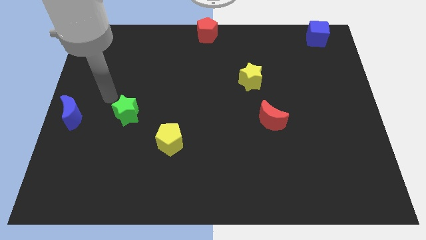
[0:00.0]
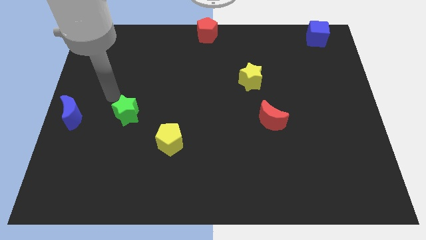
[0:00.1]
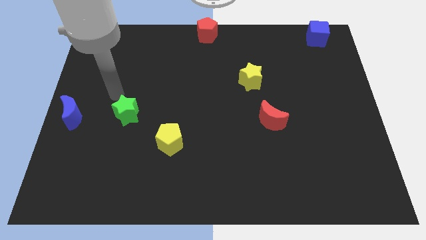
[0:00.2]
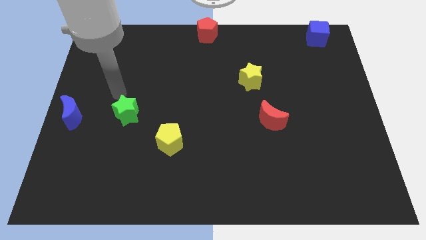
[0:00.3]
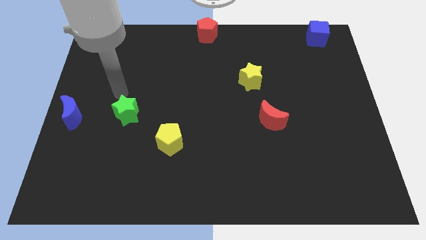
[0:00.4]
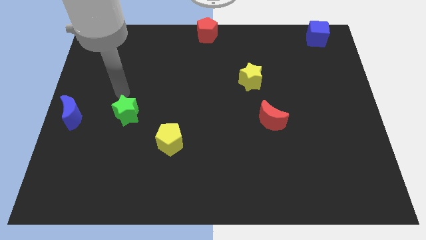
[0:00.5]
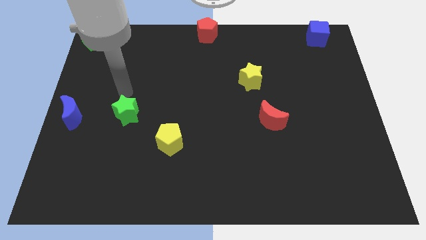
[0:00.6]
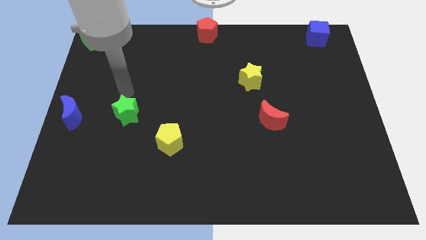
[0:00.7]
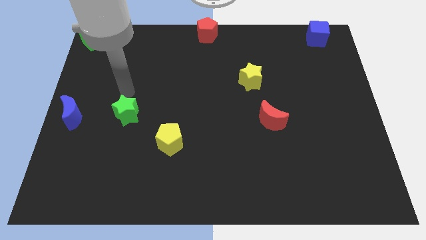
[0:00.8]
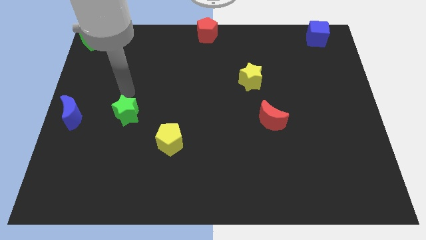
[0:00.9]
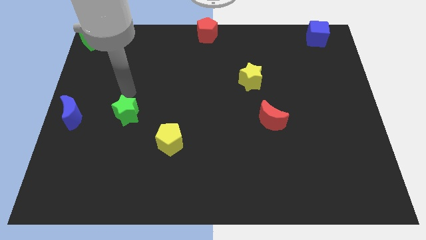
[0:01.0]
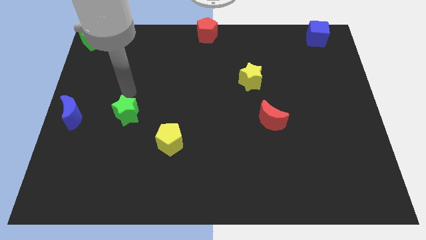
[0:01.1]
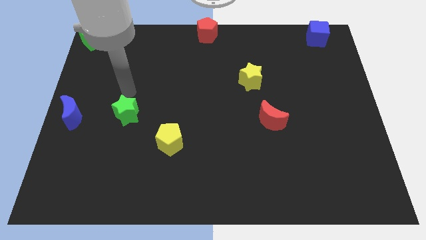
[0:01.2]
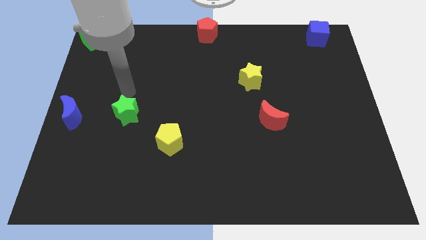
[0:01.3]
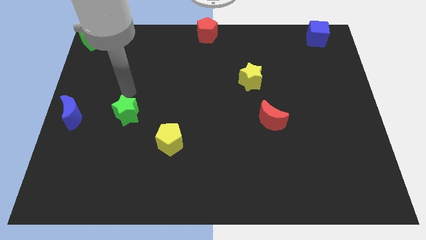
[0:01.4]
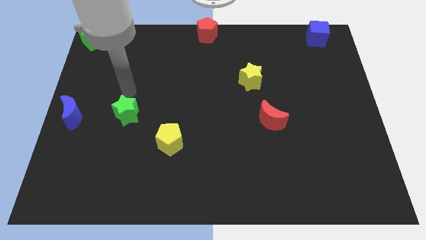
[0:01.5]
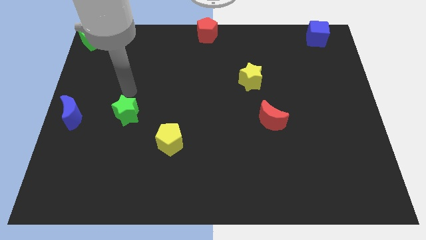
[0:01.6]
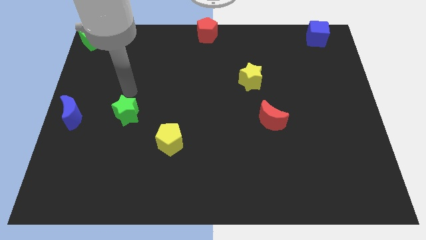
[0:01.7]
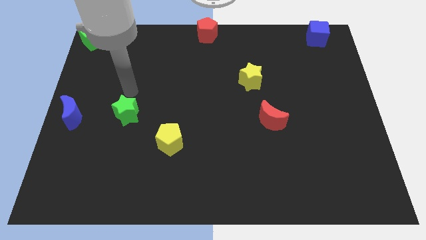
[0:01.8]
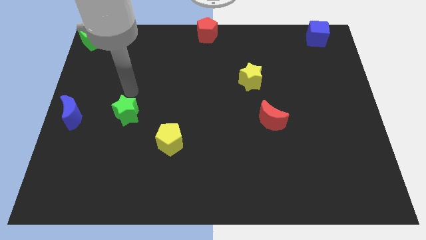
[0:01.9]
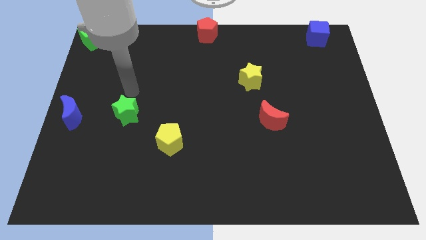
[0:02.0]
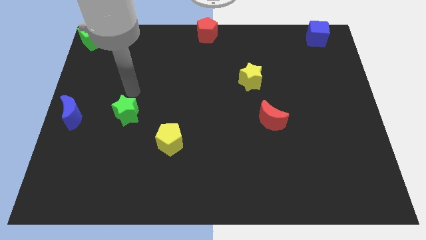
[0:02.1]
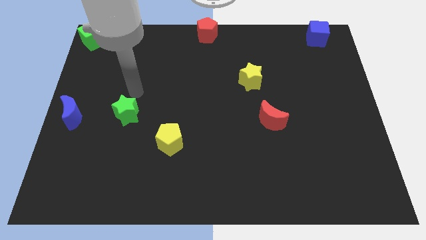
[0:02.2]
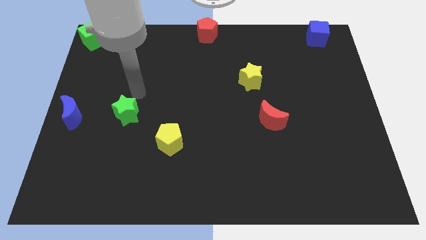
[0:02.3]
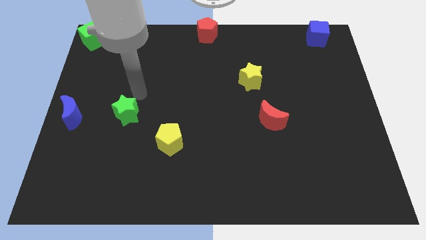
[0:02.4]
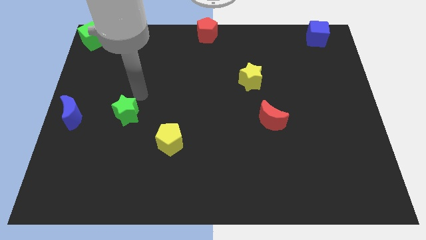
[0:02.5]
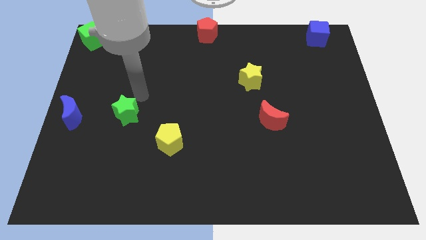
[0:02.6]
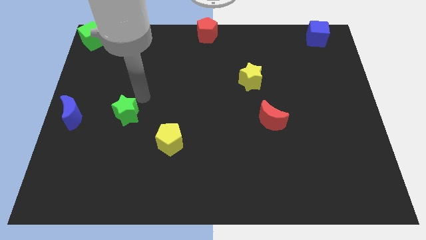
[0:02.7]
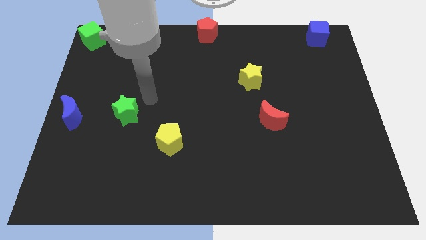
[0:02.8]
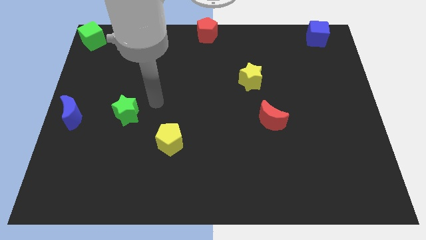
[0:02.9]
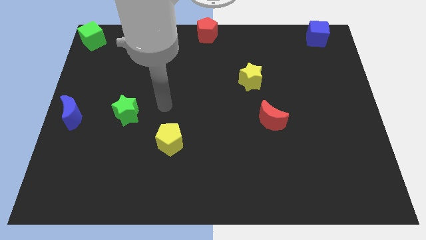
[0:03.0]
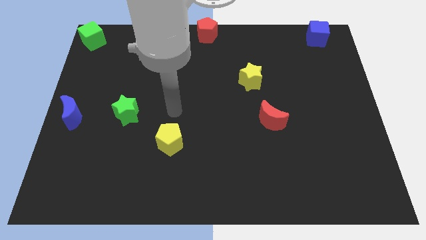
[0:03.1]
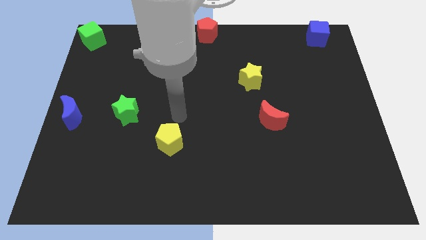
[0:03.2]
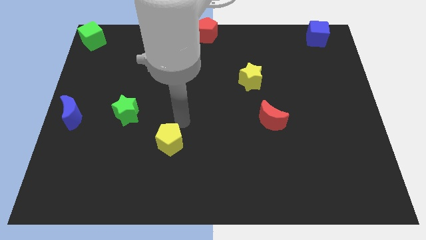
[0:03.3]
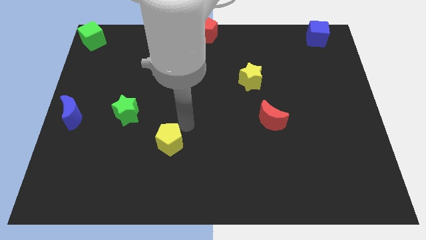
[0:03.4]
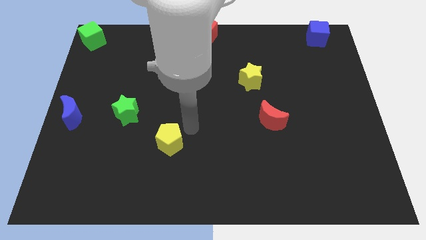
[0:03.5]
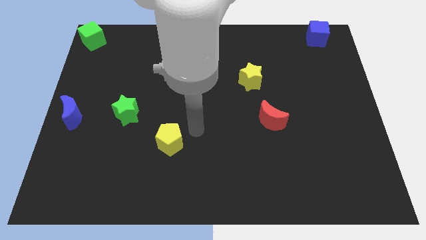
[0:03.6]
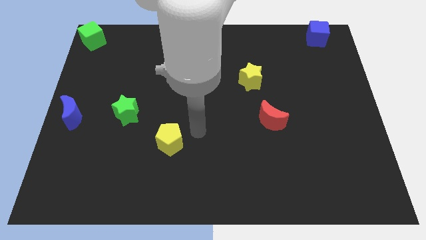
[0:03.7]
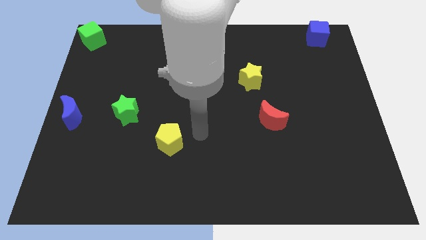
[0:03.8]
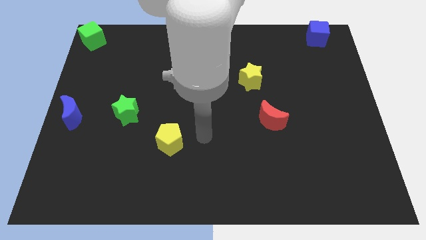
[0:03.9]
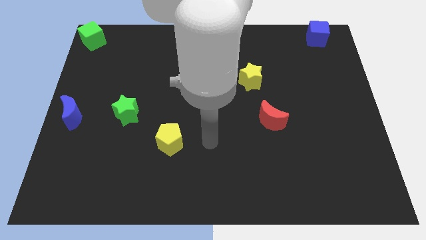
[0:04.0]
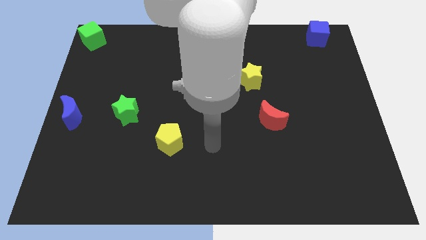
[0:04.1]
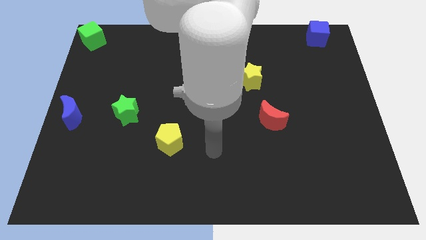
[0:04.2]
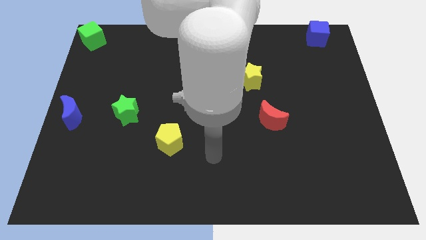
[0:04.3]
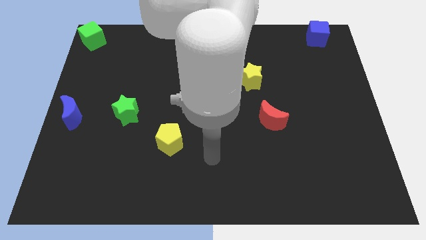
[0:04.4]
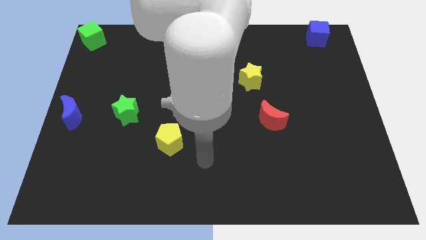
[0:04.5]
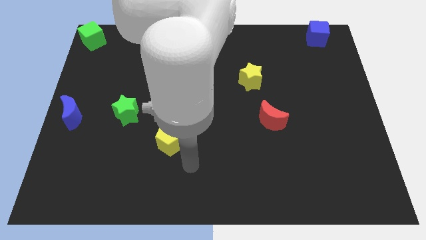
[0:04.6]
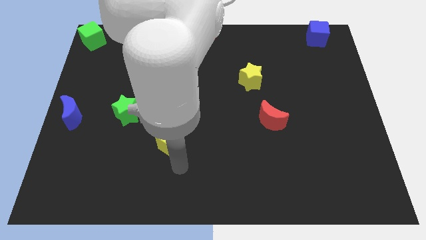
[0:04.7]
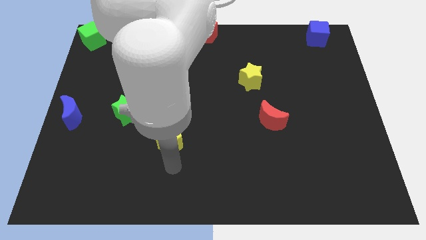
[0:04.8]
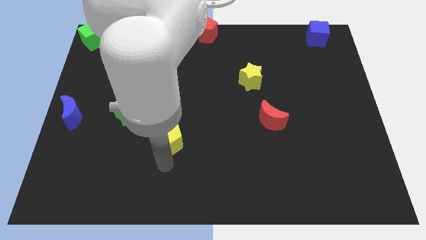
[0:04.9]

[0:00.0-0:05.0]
move your arm towards the yellow pentagon

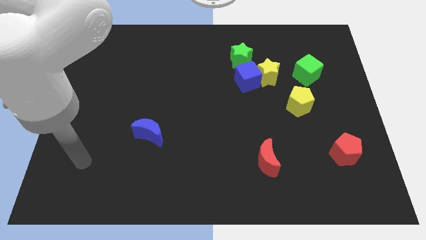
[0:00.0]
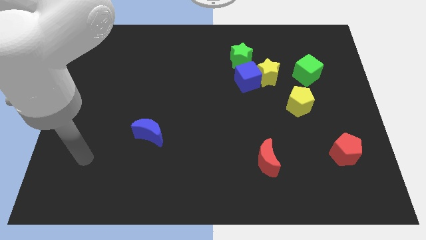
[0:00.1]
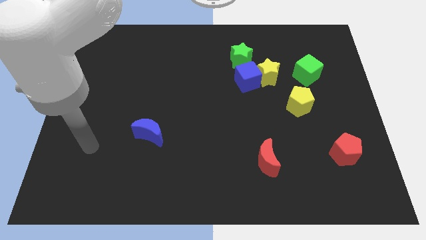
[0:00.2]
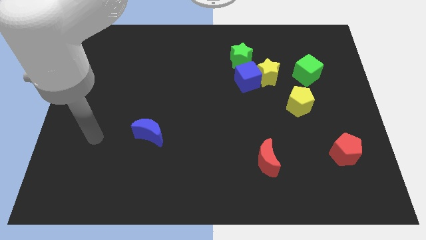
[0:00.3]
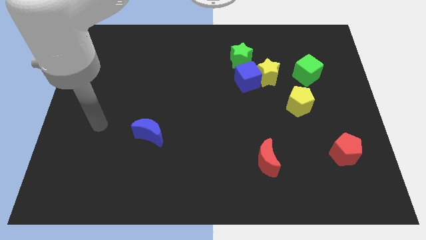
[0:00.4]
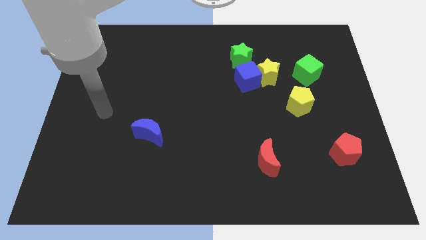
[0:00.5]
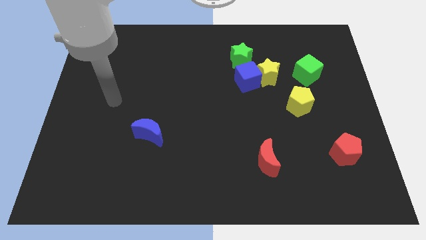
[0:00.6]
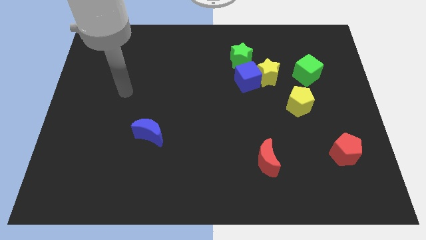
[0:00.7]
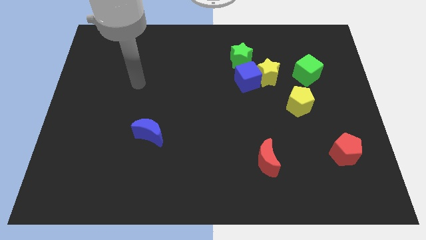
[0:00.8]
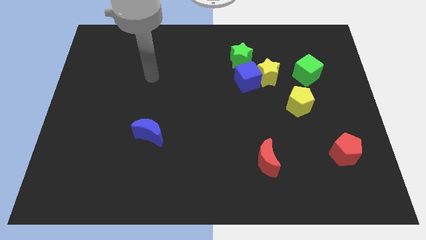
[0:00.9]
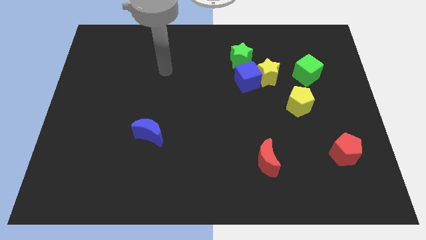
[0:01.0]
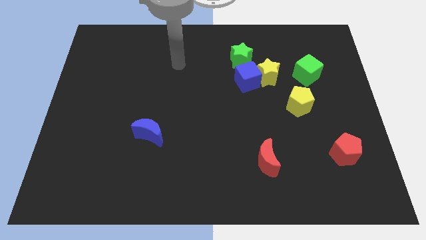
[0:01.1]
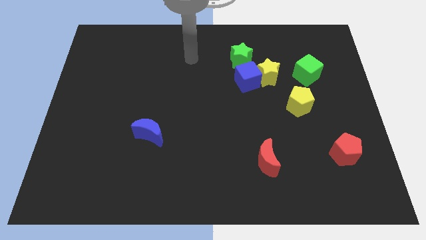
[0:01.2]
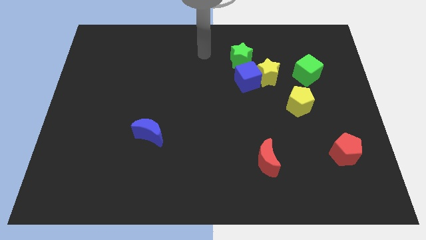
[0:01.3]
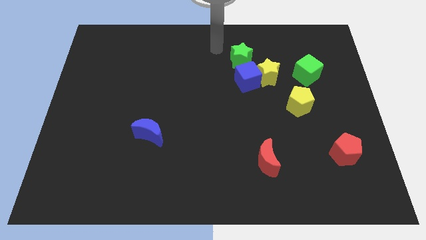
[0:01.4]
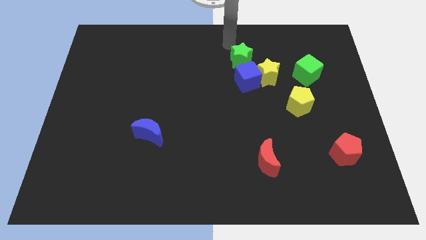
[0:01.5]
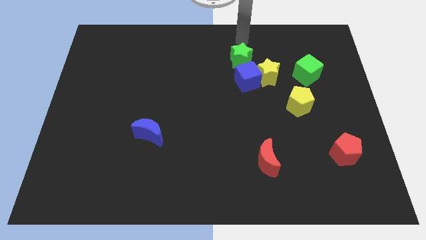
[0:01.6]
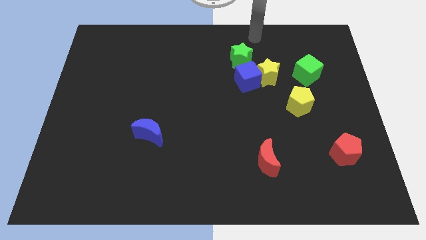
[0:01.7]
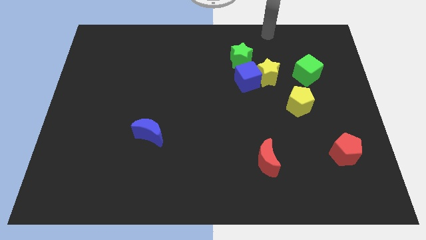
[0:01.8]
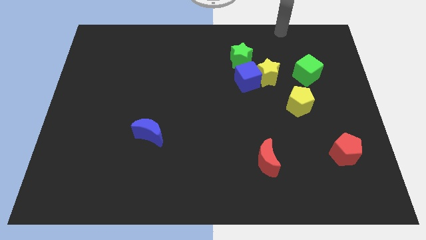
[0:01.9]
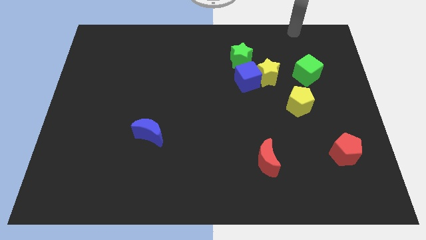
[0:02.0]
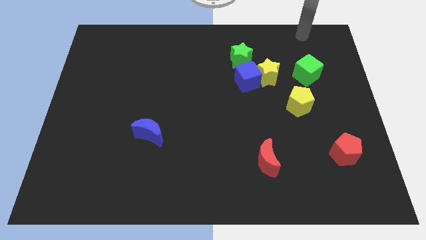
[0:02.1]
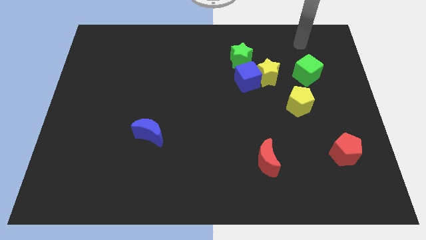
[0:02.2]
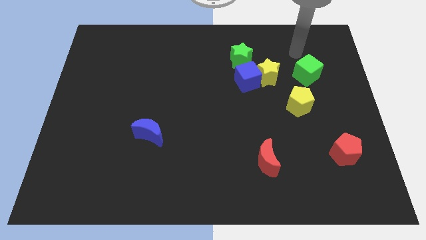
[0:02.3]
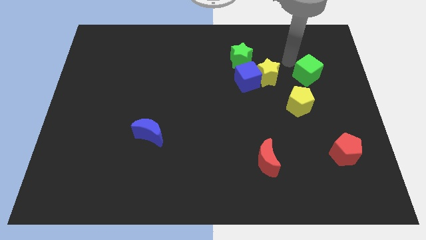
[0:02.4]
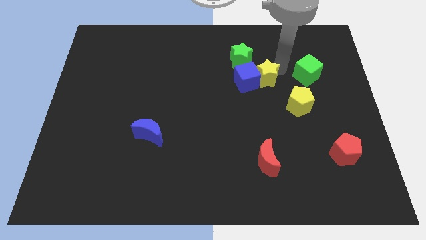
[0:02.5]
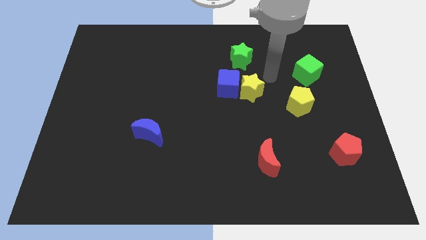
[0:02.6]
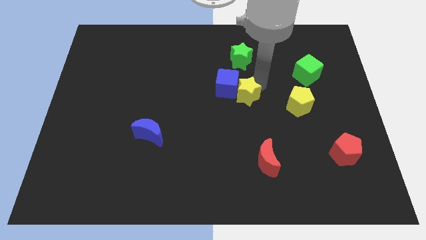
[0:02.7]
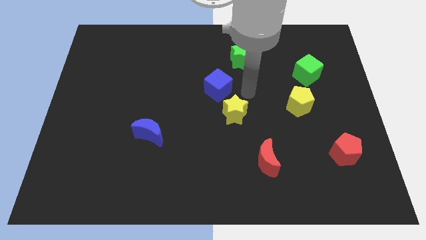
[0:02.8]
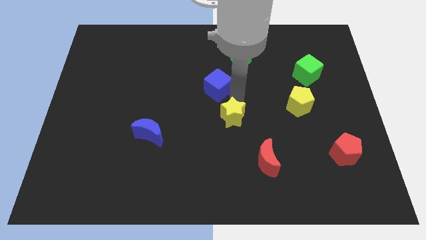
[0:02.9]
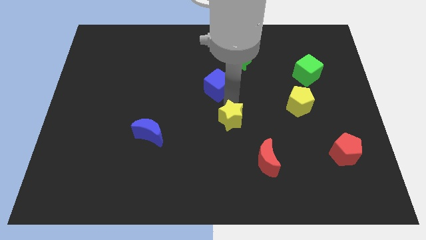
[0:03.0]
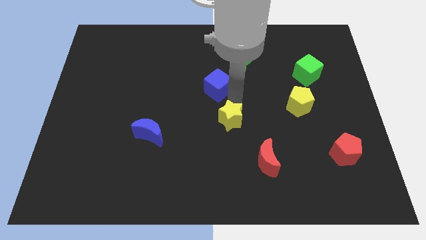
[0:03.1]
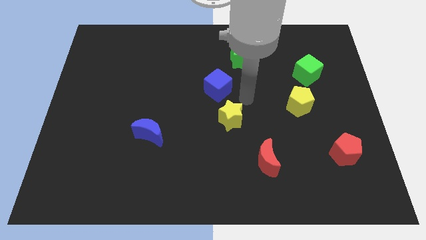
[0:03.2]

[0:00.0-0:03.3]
move the blue cube and yellow star diagonal to each other

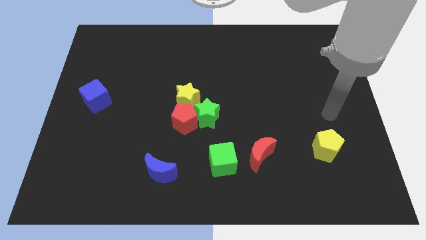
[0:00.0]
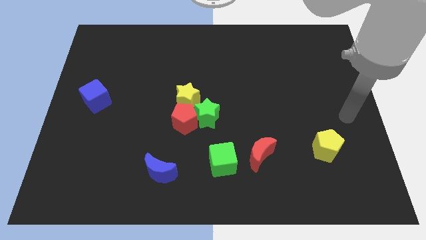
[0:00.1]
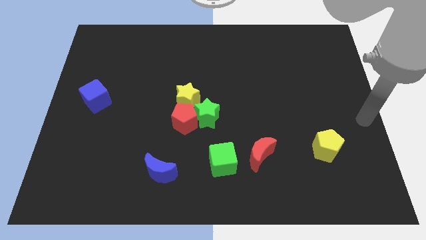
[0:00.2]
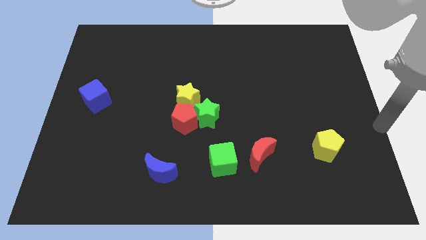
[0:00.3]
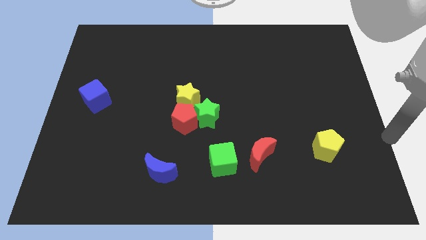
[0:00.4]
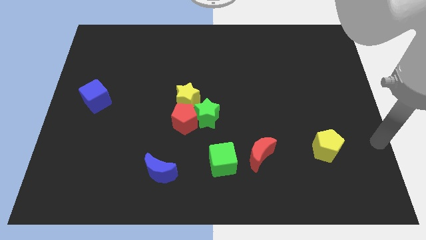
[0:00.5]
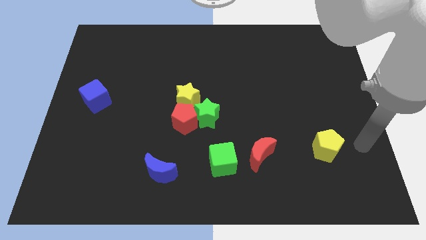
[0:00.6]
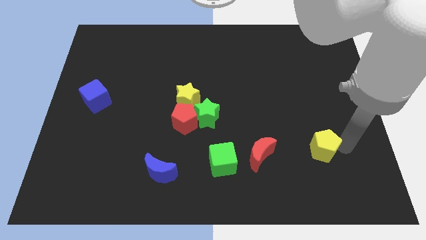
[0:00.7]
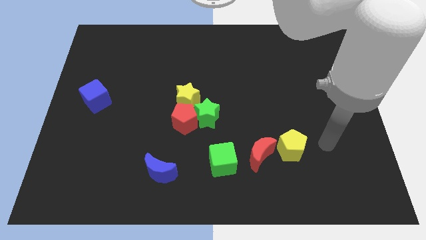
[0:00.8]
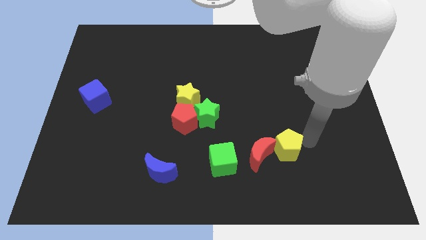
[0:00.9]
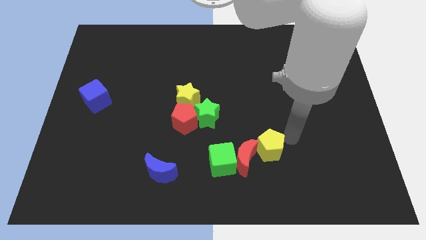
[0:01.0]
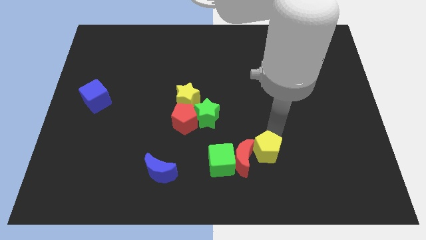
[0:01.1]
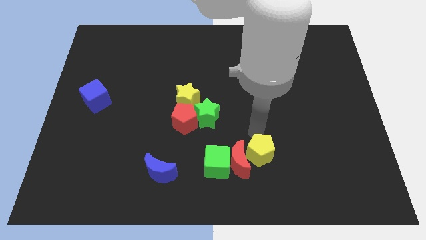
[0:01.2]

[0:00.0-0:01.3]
move the yellow pentagon towards the red crescent
